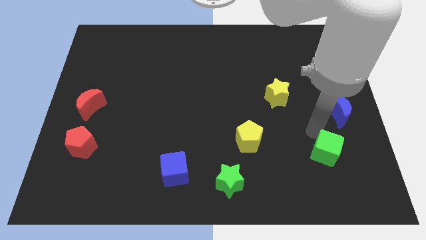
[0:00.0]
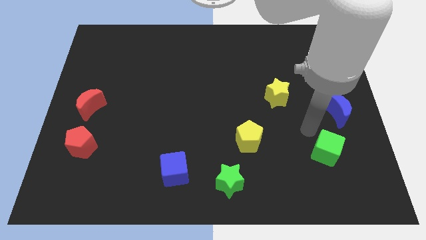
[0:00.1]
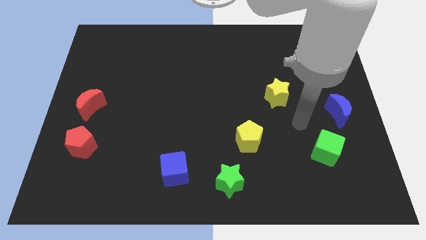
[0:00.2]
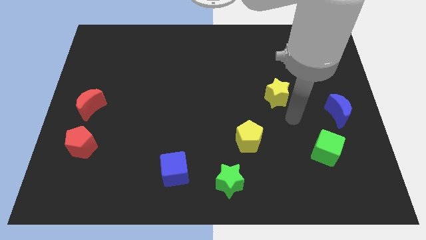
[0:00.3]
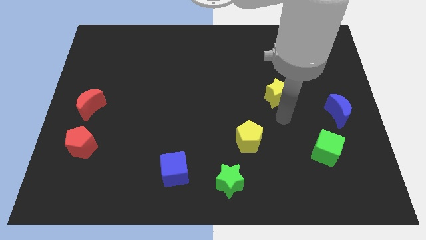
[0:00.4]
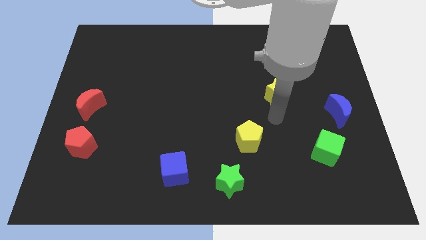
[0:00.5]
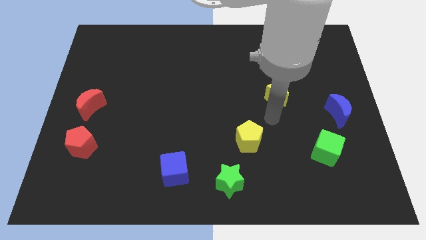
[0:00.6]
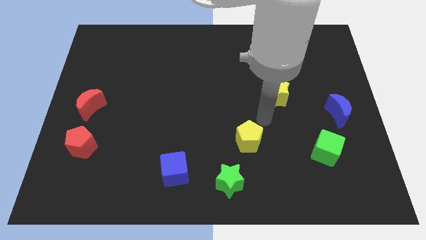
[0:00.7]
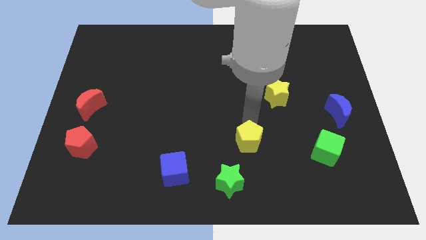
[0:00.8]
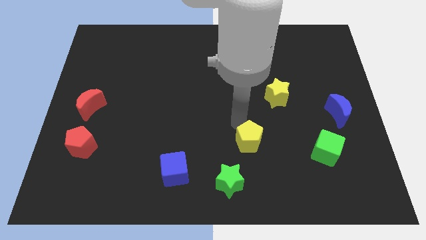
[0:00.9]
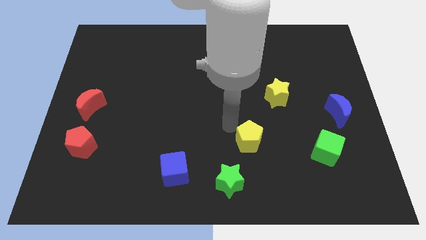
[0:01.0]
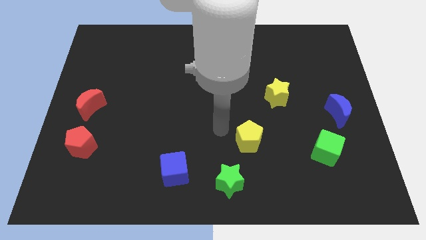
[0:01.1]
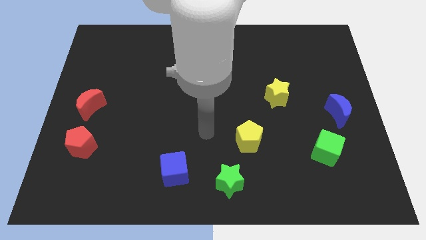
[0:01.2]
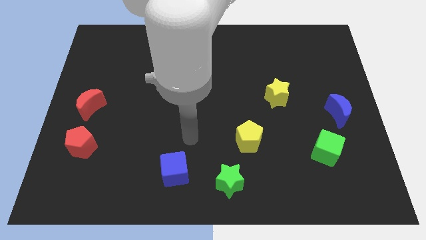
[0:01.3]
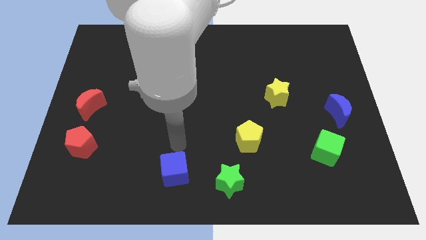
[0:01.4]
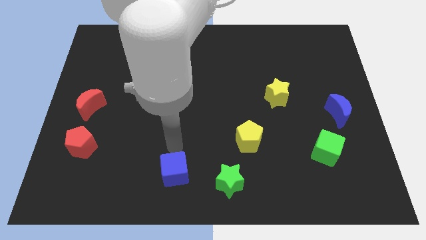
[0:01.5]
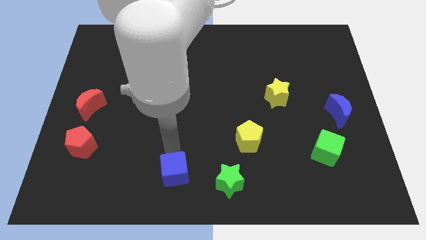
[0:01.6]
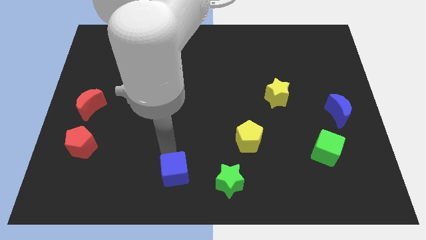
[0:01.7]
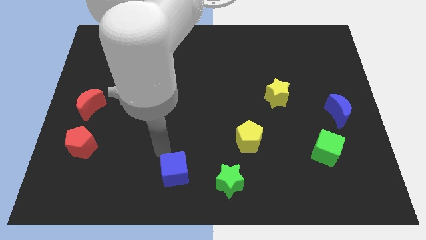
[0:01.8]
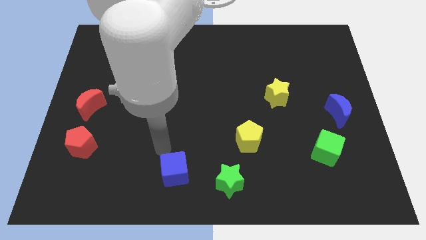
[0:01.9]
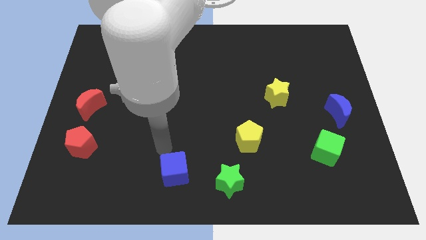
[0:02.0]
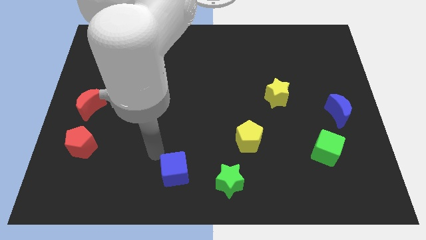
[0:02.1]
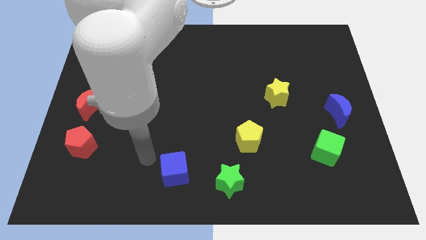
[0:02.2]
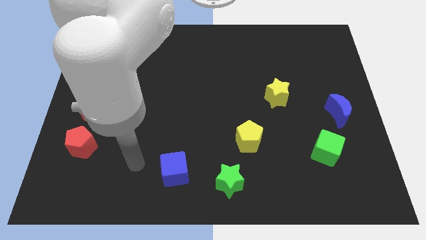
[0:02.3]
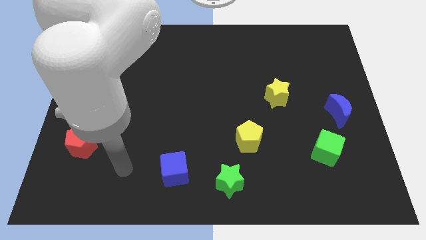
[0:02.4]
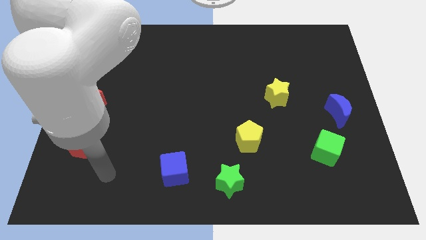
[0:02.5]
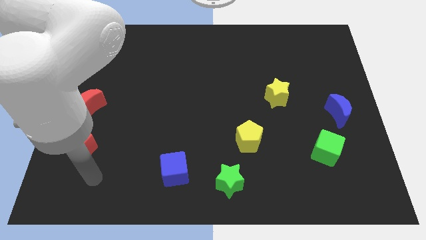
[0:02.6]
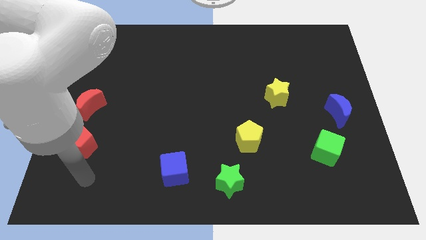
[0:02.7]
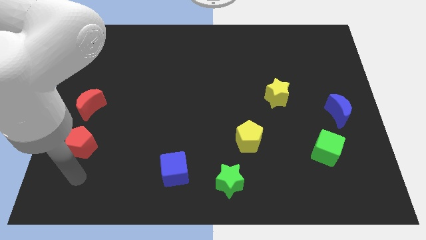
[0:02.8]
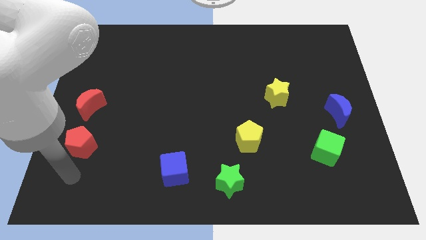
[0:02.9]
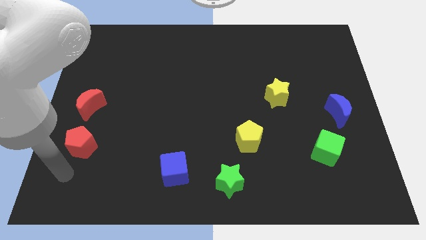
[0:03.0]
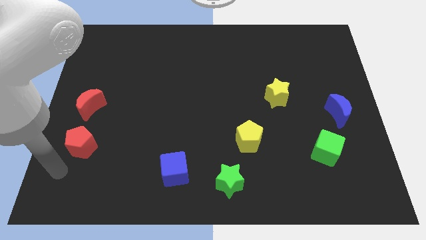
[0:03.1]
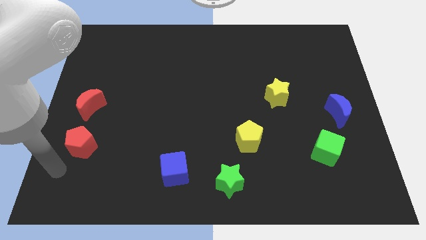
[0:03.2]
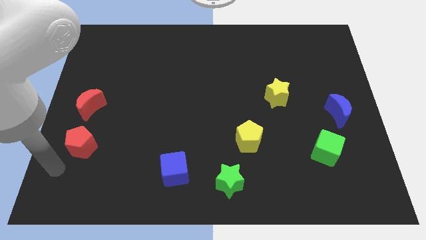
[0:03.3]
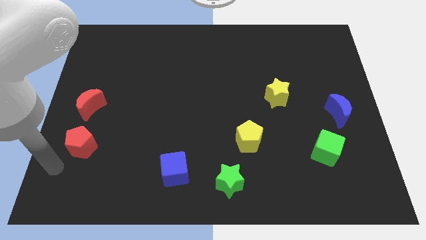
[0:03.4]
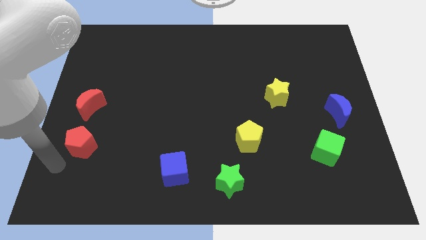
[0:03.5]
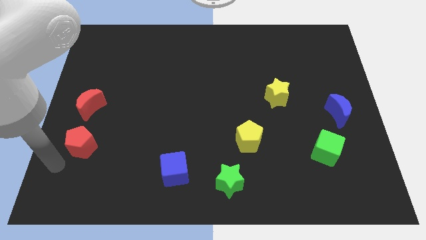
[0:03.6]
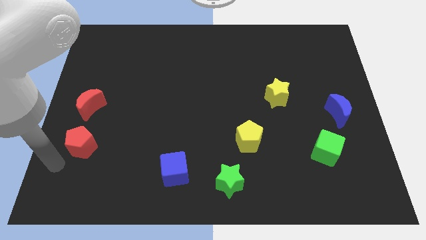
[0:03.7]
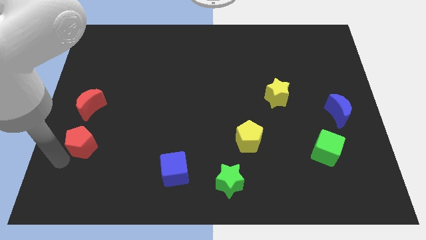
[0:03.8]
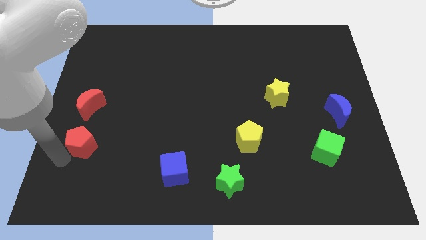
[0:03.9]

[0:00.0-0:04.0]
go near the red pentagon

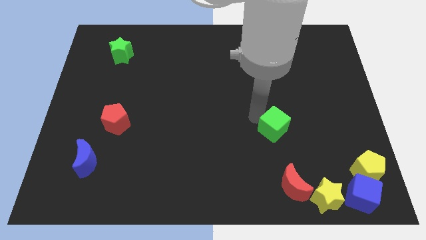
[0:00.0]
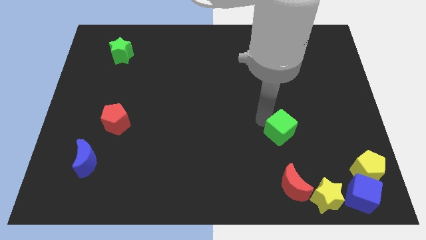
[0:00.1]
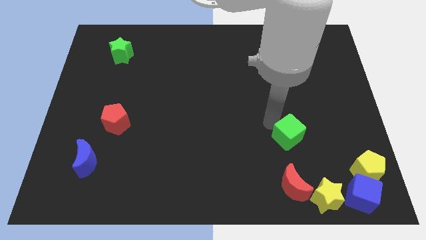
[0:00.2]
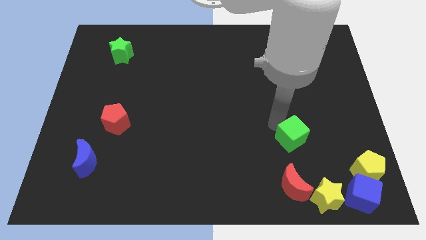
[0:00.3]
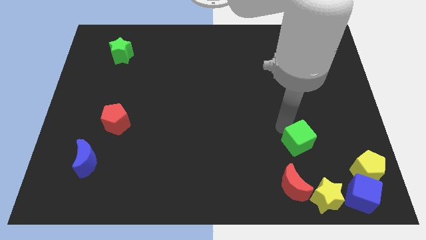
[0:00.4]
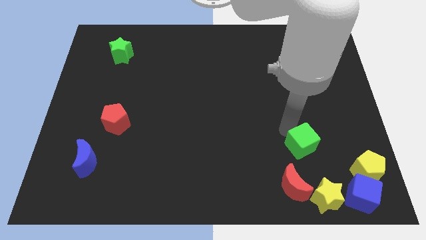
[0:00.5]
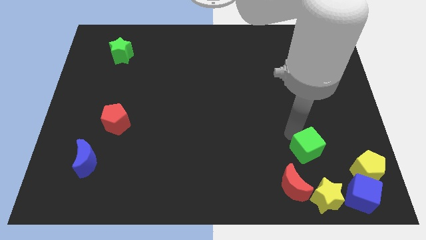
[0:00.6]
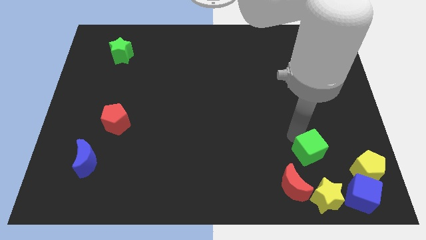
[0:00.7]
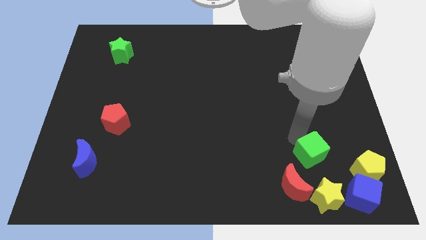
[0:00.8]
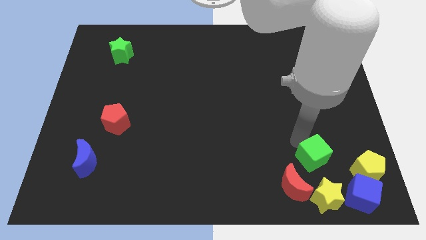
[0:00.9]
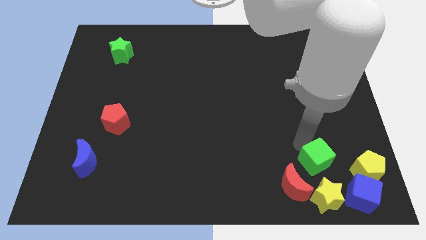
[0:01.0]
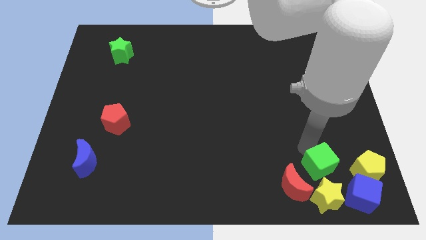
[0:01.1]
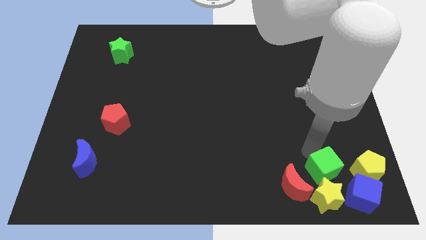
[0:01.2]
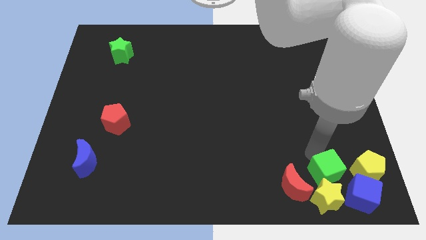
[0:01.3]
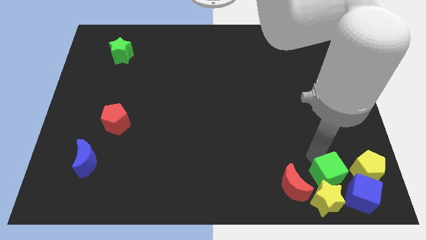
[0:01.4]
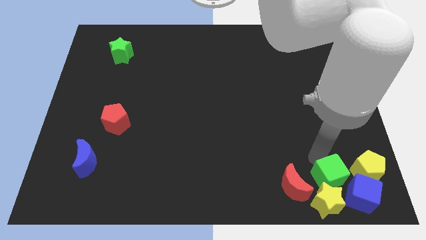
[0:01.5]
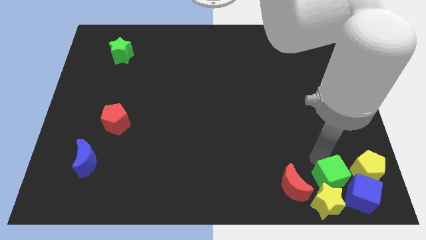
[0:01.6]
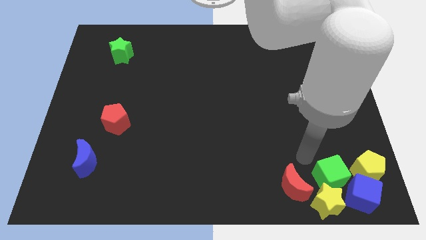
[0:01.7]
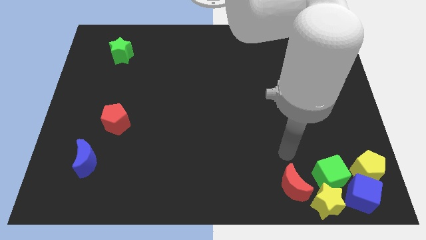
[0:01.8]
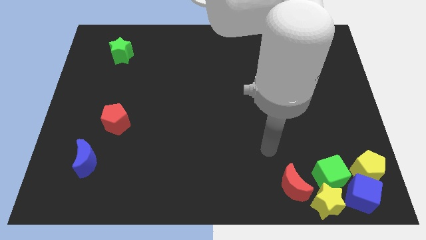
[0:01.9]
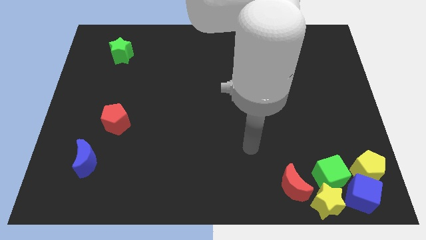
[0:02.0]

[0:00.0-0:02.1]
move green cube into yellow star

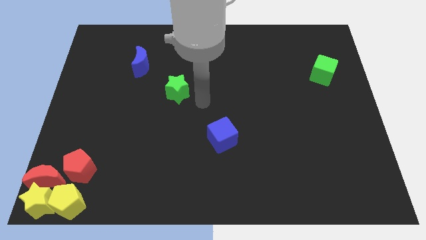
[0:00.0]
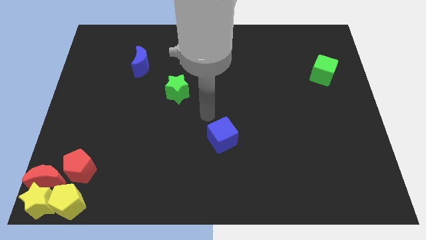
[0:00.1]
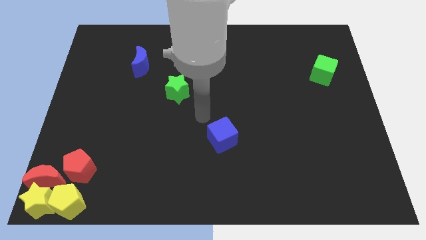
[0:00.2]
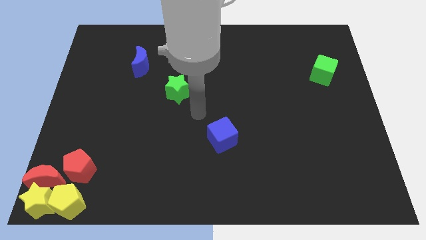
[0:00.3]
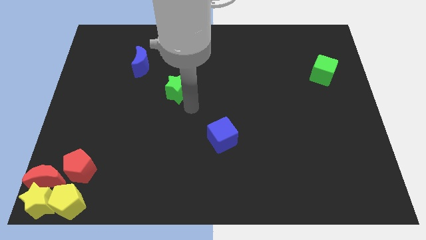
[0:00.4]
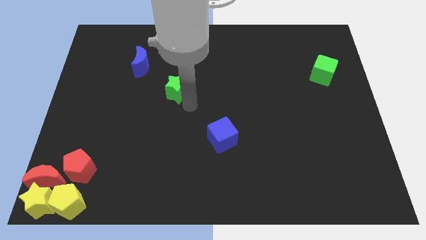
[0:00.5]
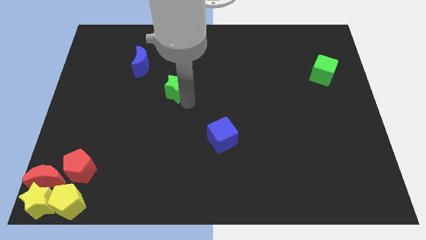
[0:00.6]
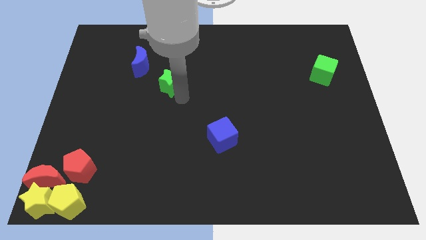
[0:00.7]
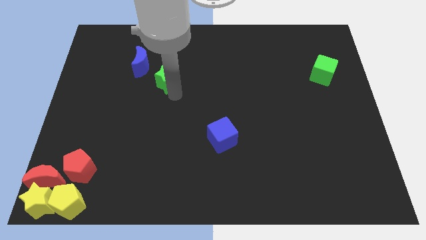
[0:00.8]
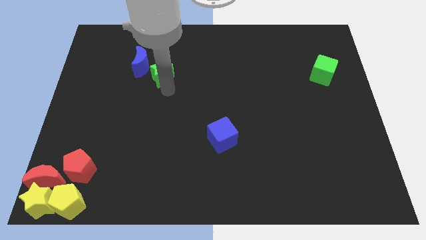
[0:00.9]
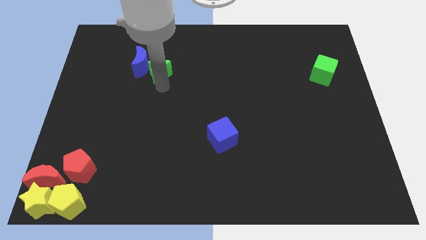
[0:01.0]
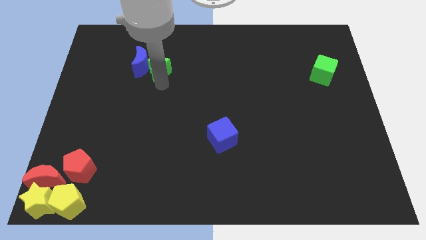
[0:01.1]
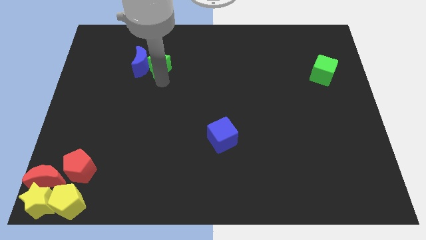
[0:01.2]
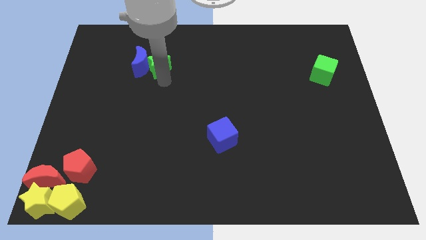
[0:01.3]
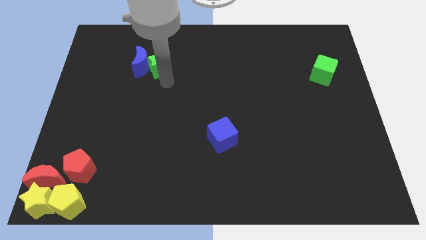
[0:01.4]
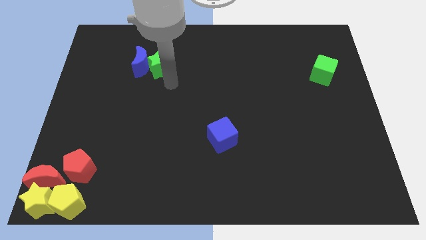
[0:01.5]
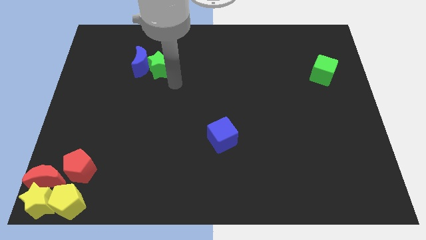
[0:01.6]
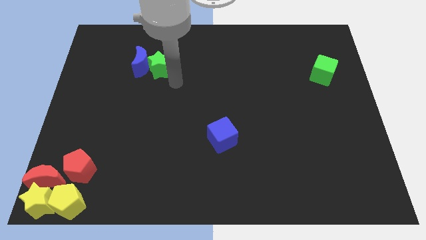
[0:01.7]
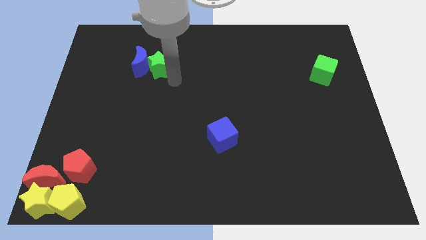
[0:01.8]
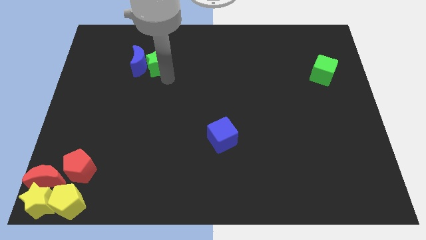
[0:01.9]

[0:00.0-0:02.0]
push the green star into the blue crescent

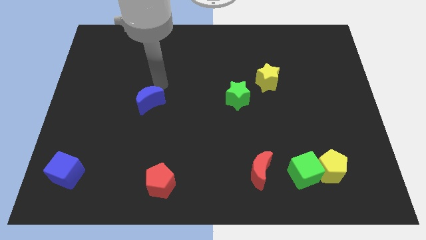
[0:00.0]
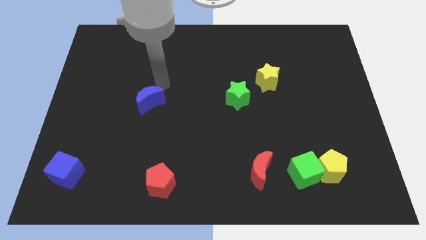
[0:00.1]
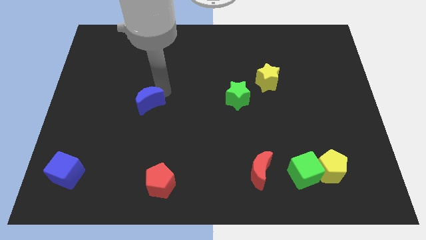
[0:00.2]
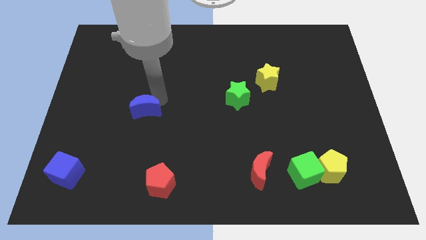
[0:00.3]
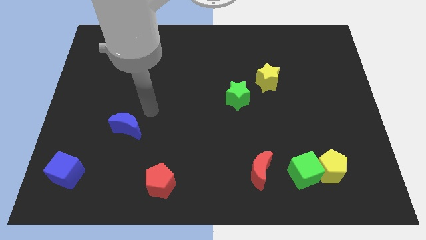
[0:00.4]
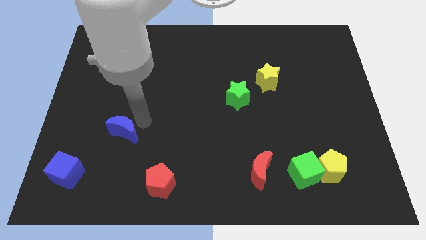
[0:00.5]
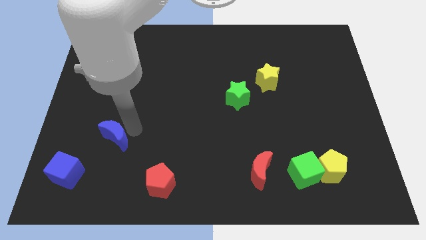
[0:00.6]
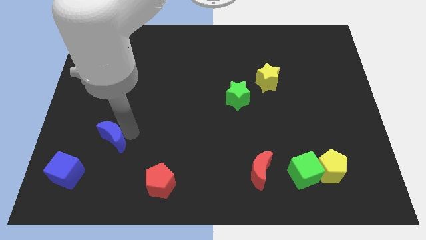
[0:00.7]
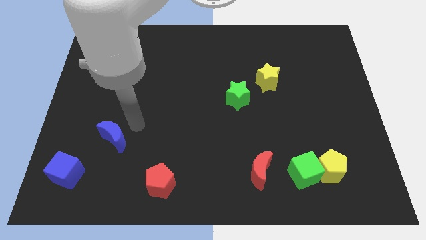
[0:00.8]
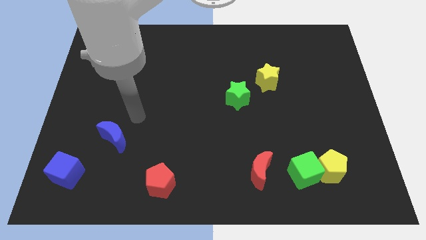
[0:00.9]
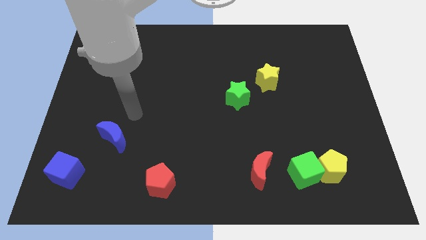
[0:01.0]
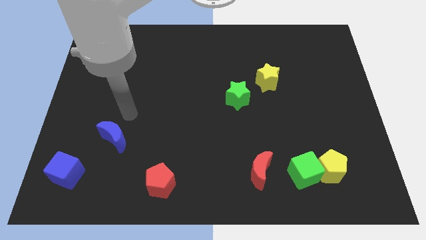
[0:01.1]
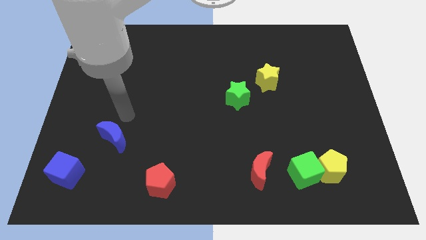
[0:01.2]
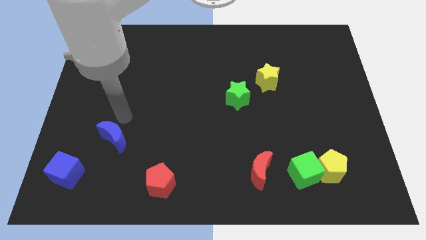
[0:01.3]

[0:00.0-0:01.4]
place the blue crescent towards the top right side of the blue cube
